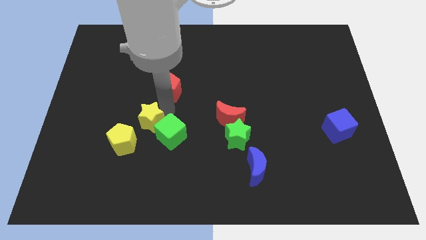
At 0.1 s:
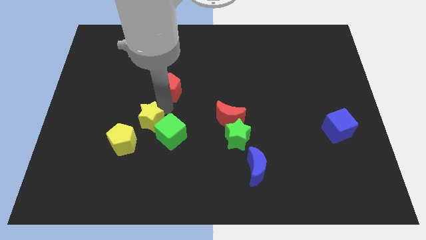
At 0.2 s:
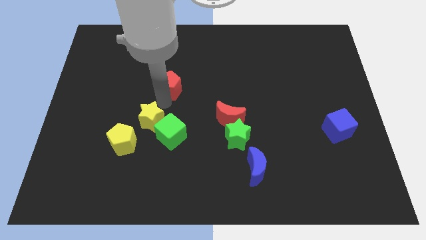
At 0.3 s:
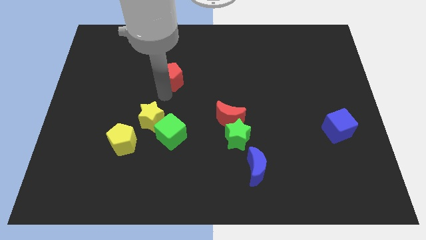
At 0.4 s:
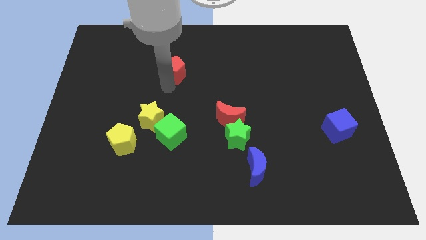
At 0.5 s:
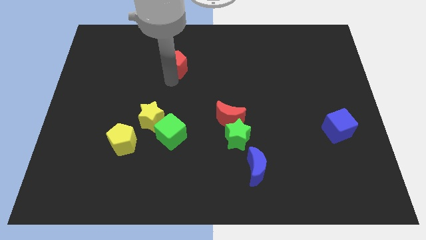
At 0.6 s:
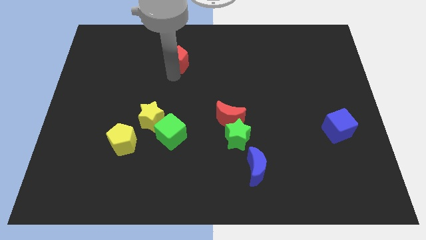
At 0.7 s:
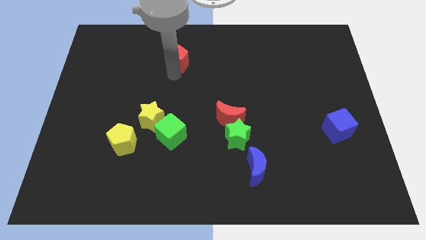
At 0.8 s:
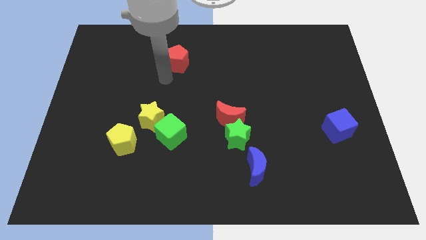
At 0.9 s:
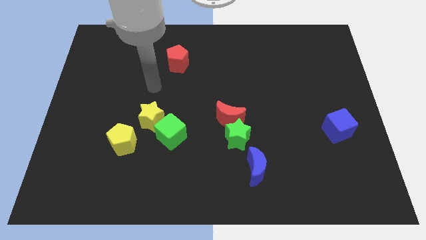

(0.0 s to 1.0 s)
push the red pentagon slightly to the top

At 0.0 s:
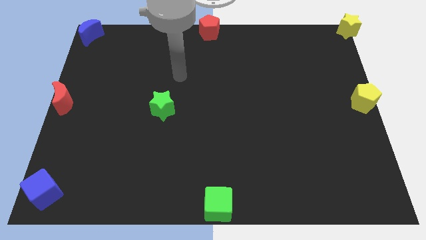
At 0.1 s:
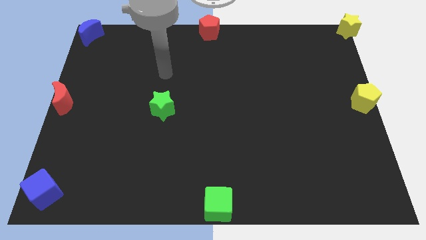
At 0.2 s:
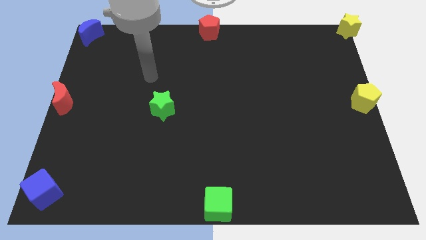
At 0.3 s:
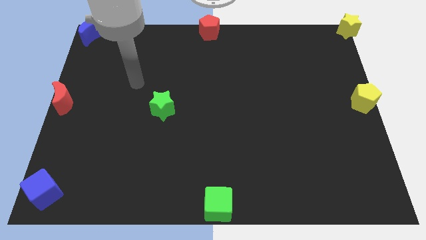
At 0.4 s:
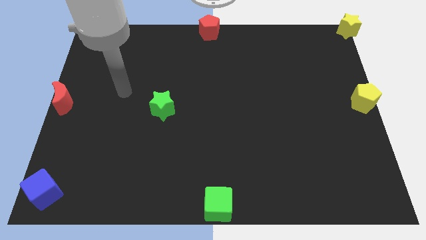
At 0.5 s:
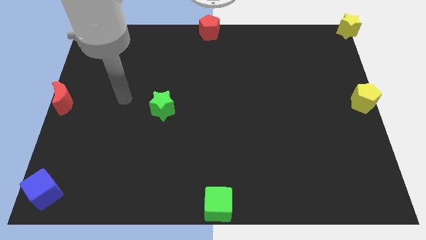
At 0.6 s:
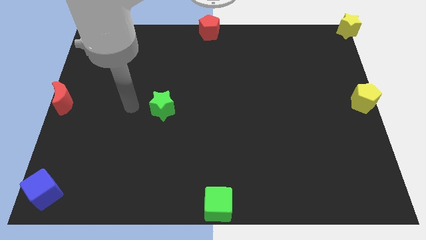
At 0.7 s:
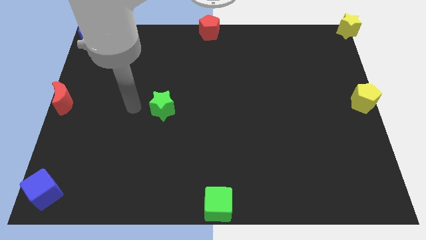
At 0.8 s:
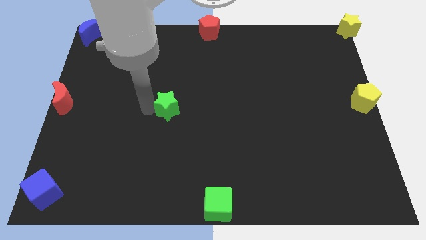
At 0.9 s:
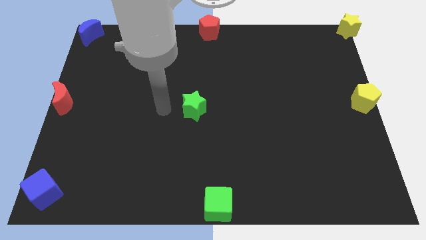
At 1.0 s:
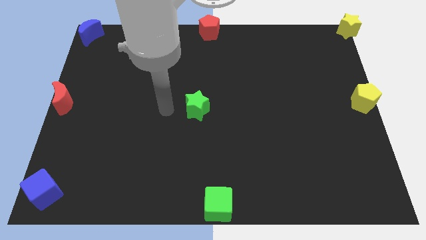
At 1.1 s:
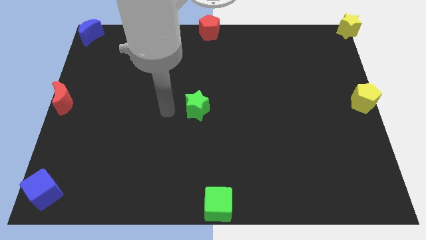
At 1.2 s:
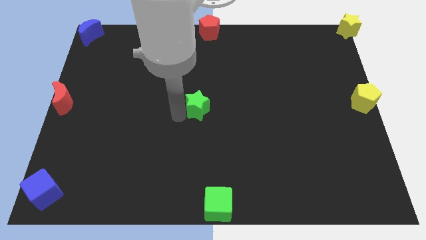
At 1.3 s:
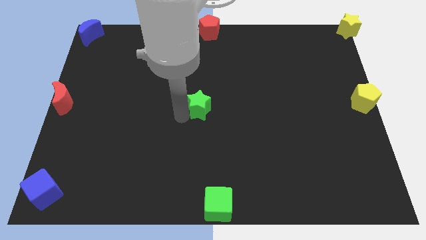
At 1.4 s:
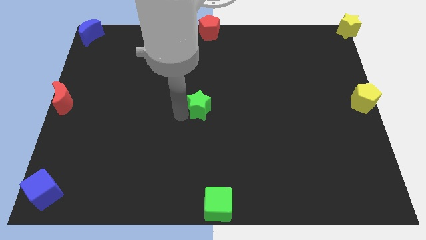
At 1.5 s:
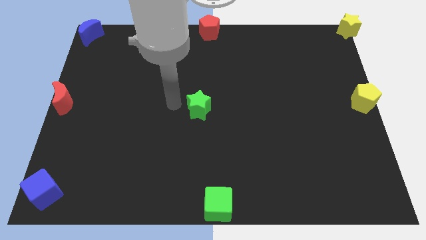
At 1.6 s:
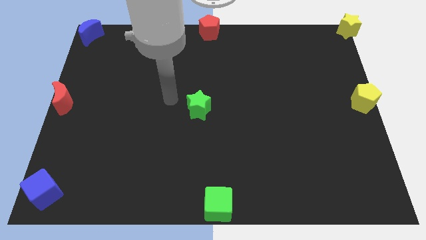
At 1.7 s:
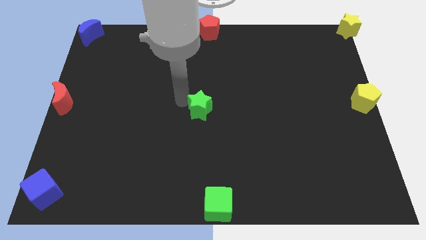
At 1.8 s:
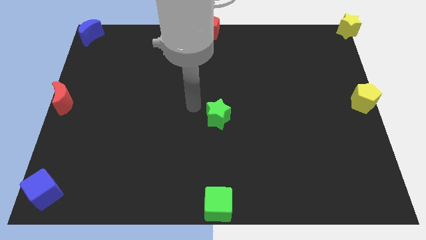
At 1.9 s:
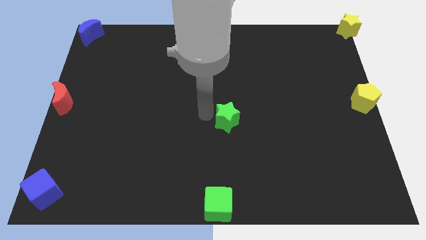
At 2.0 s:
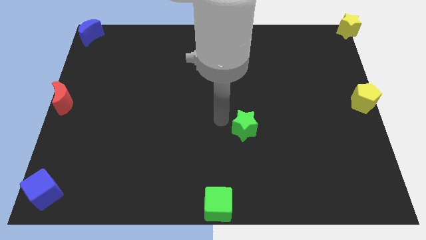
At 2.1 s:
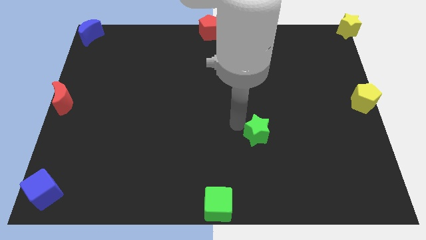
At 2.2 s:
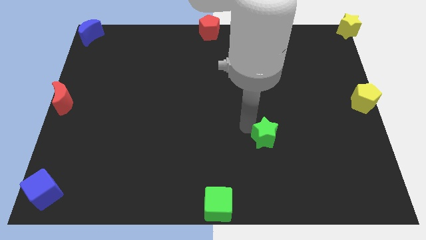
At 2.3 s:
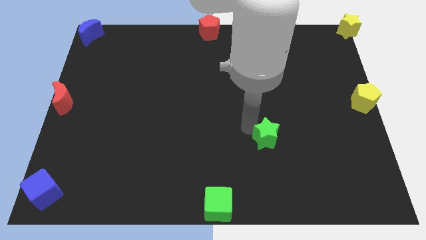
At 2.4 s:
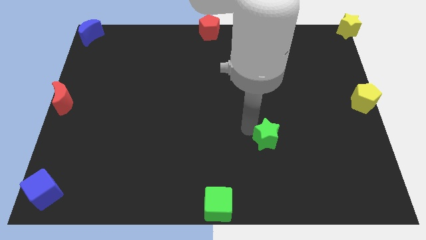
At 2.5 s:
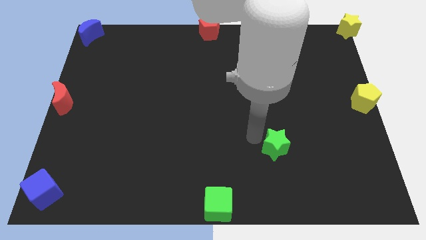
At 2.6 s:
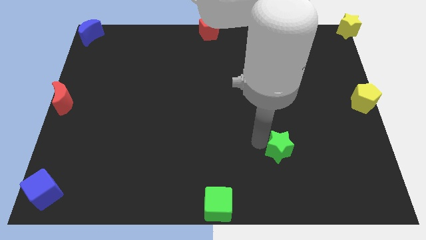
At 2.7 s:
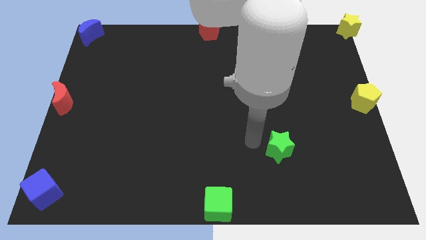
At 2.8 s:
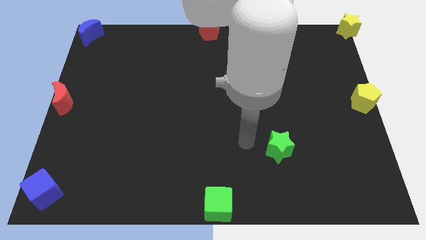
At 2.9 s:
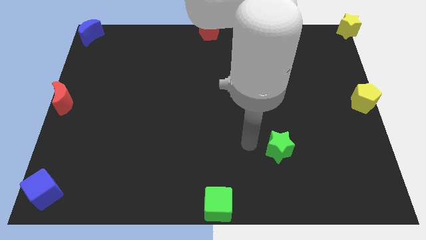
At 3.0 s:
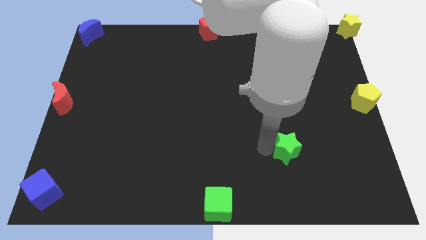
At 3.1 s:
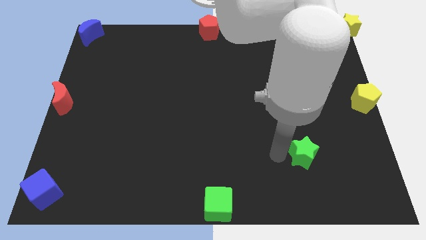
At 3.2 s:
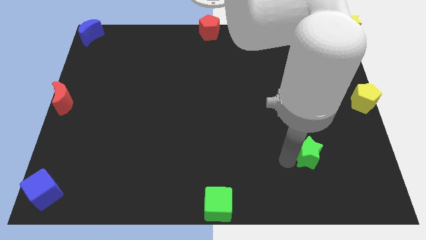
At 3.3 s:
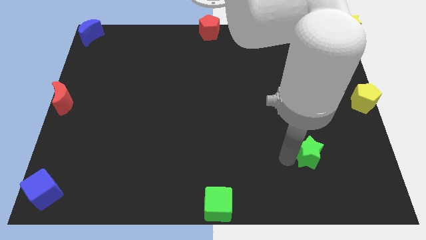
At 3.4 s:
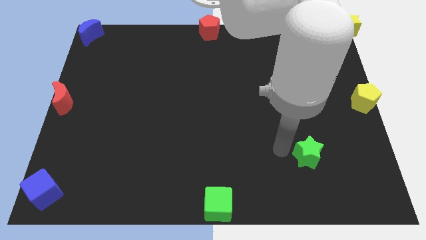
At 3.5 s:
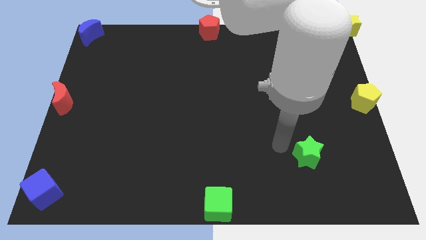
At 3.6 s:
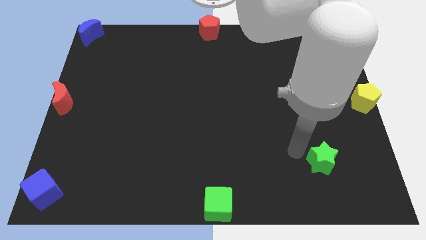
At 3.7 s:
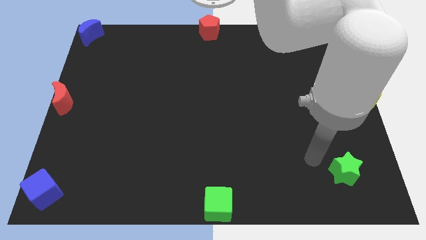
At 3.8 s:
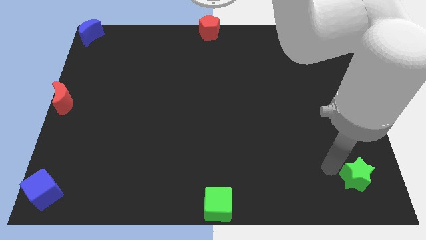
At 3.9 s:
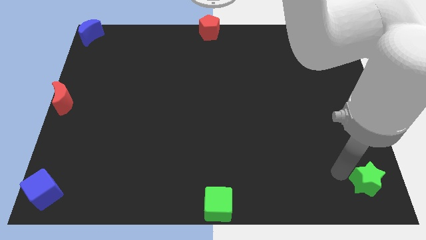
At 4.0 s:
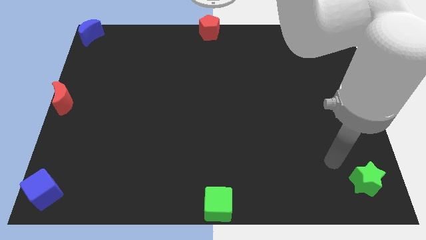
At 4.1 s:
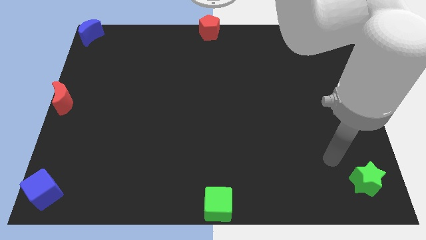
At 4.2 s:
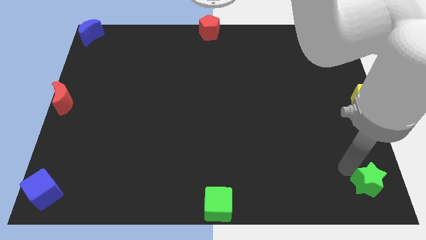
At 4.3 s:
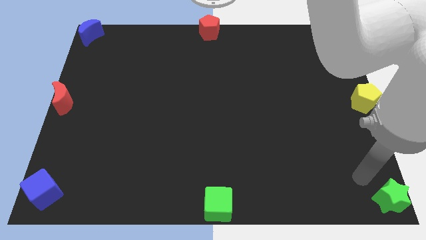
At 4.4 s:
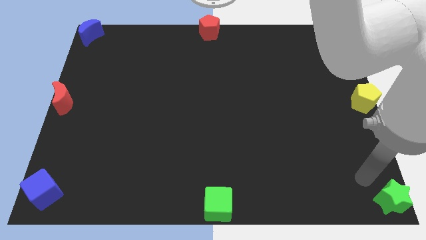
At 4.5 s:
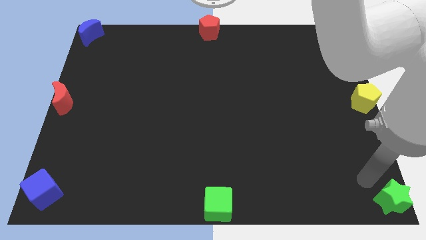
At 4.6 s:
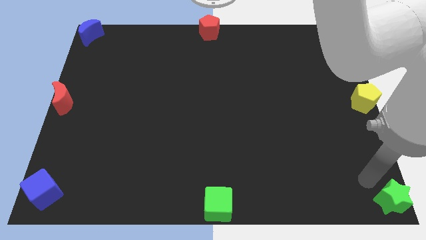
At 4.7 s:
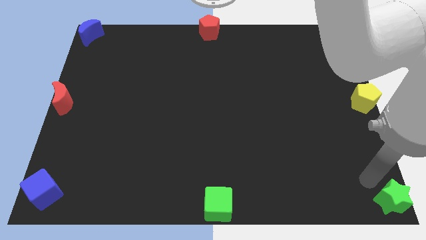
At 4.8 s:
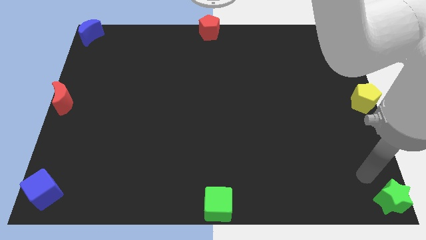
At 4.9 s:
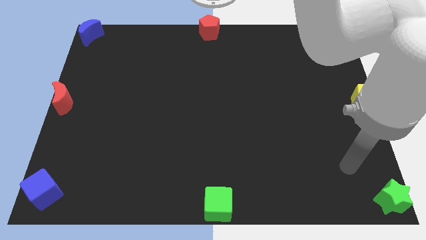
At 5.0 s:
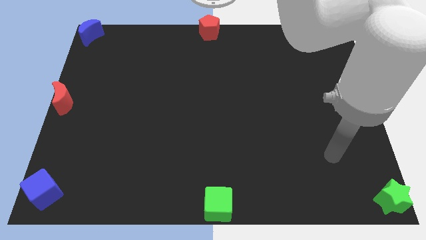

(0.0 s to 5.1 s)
push the green star to the bottom right

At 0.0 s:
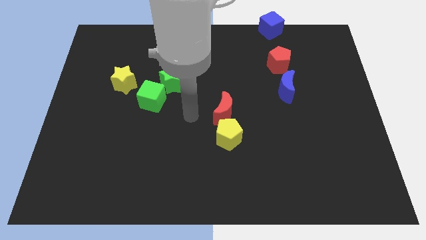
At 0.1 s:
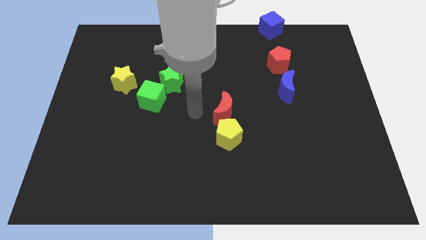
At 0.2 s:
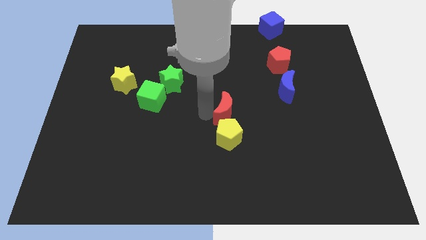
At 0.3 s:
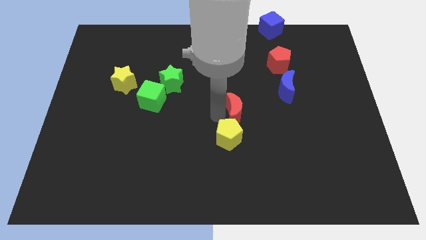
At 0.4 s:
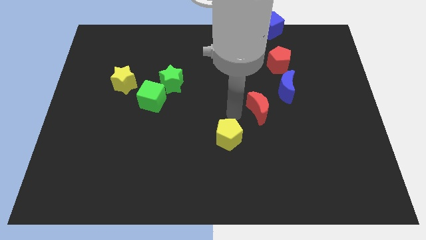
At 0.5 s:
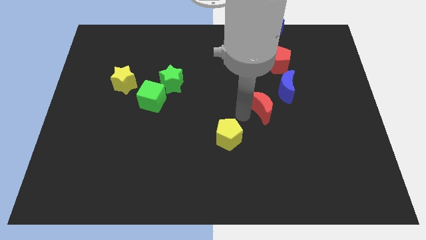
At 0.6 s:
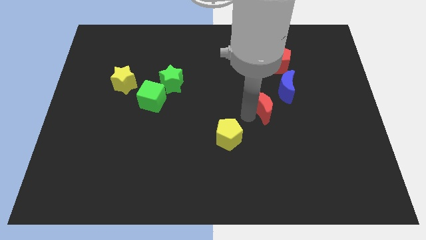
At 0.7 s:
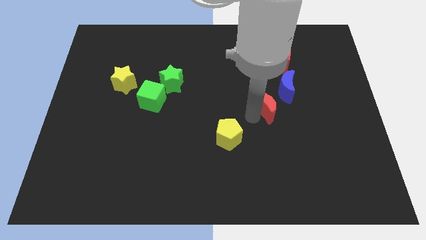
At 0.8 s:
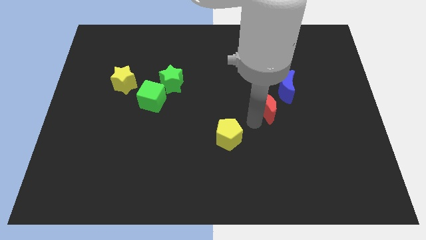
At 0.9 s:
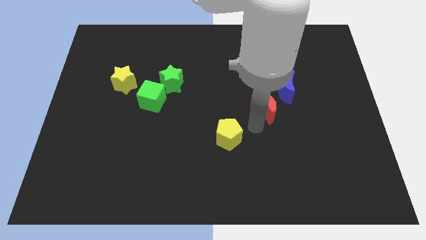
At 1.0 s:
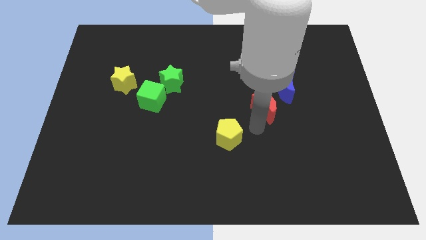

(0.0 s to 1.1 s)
move the red crescent towards the blue crescent

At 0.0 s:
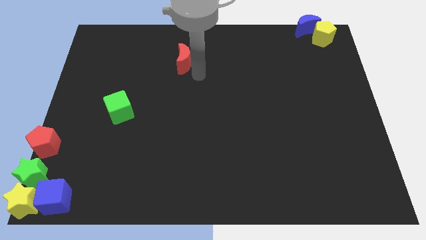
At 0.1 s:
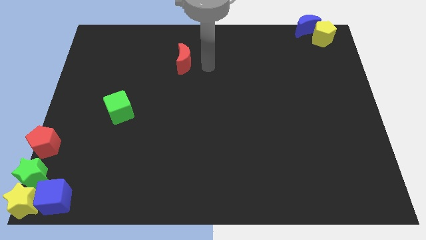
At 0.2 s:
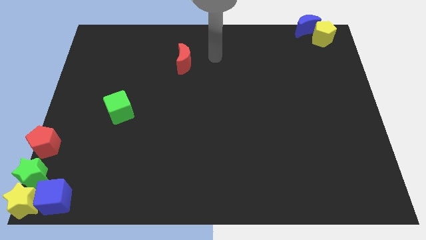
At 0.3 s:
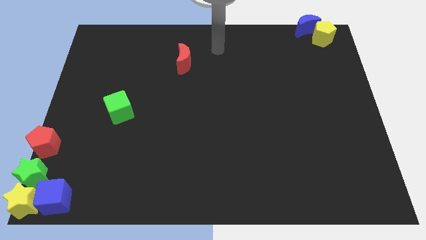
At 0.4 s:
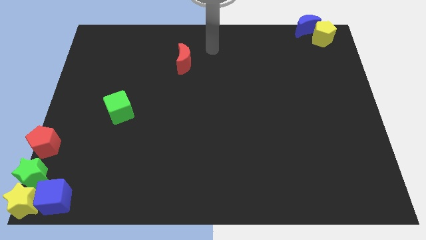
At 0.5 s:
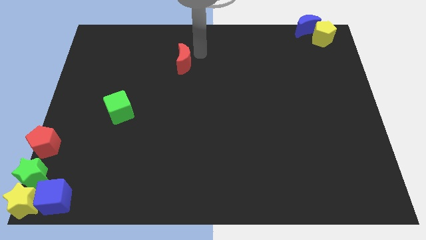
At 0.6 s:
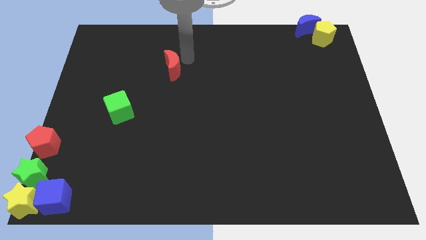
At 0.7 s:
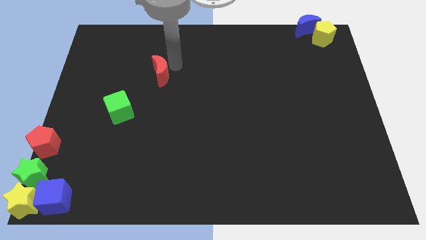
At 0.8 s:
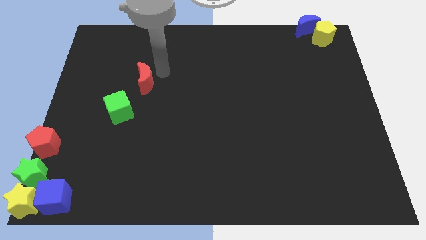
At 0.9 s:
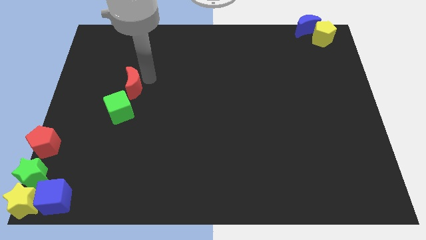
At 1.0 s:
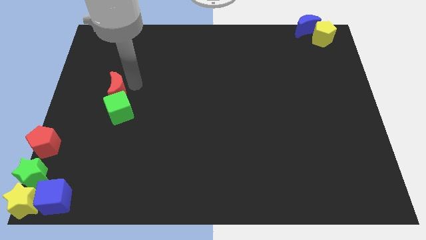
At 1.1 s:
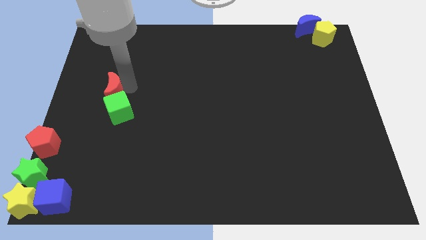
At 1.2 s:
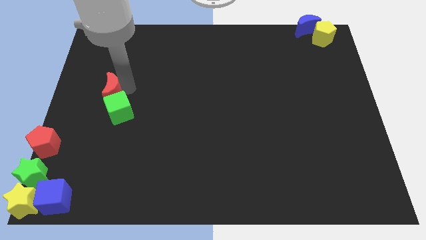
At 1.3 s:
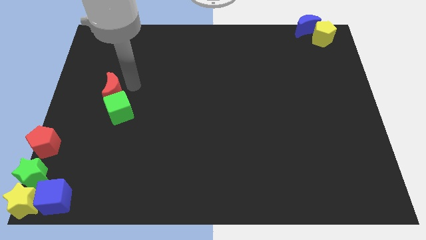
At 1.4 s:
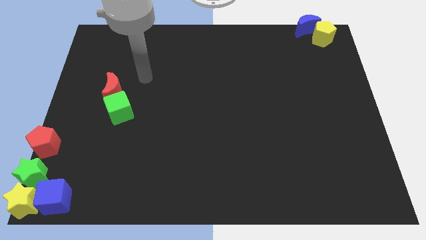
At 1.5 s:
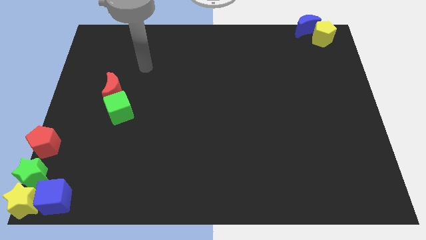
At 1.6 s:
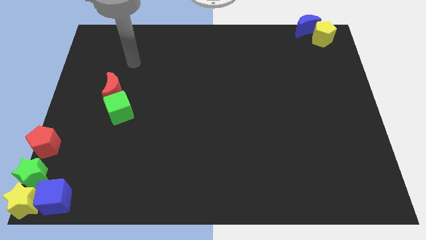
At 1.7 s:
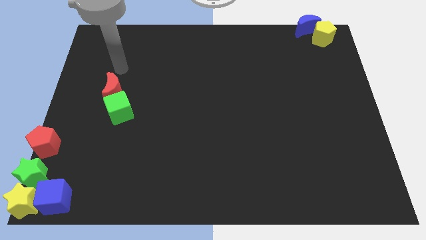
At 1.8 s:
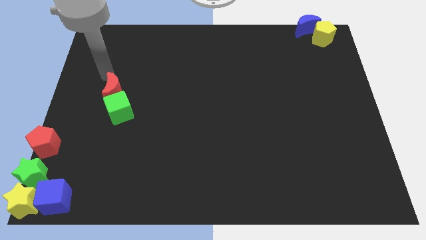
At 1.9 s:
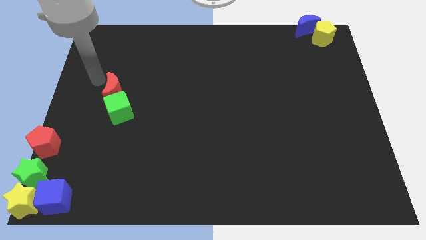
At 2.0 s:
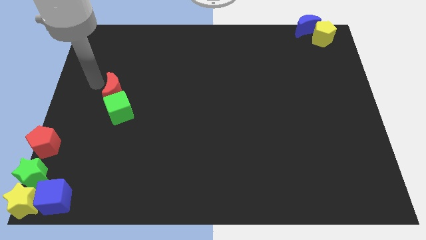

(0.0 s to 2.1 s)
move the red moon to the top of the green cube
